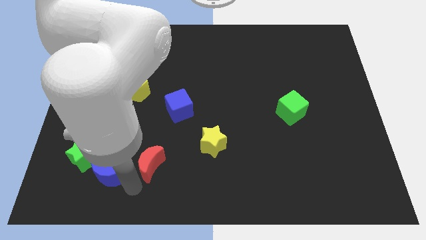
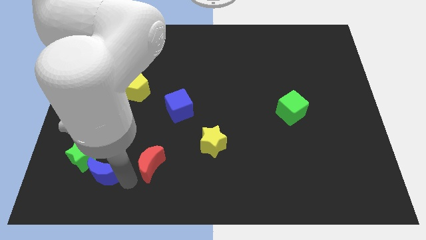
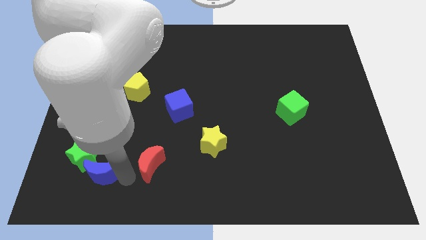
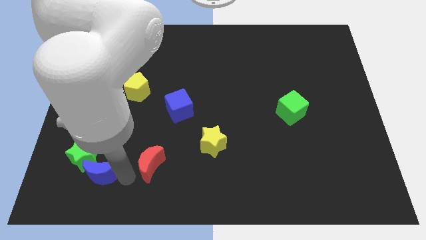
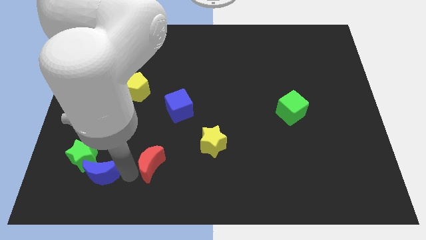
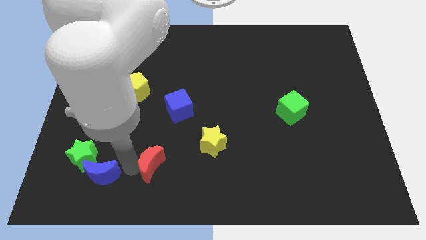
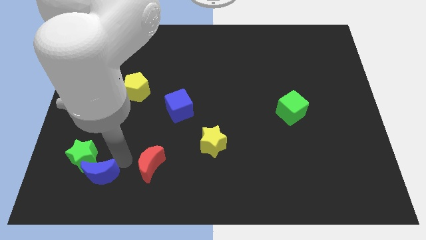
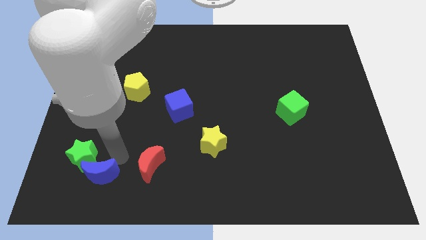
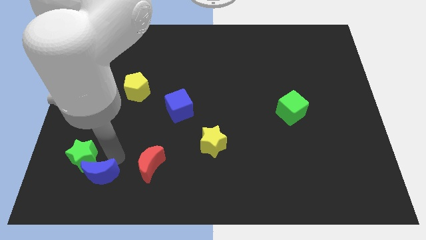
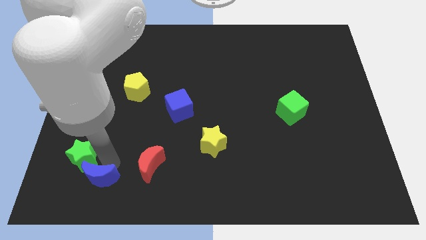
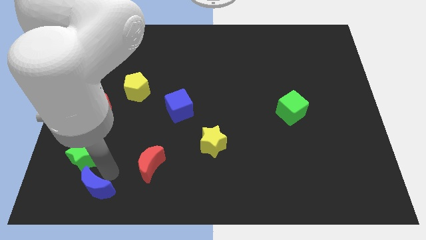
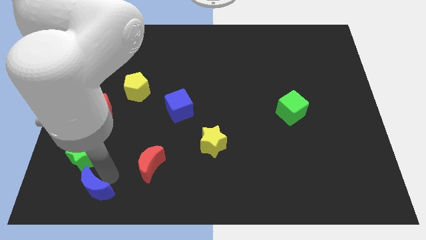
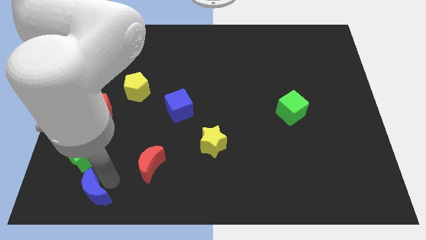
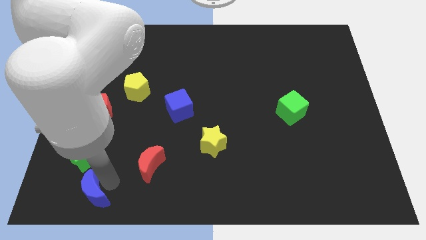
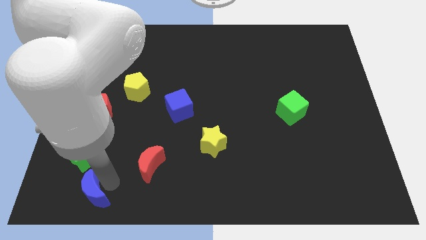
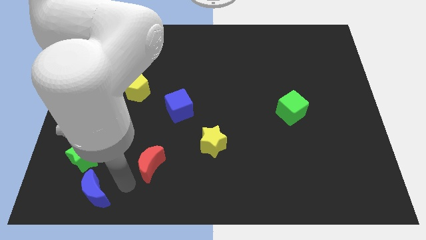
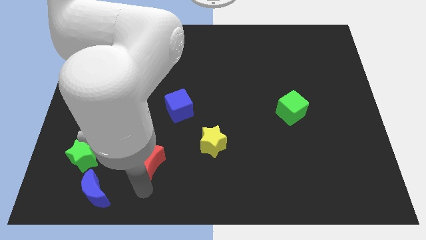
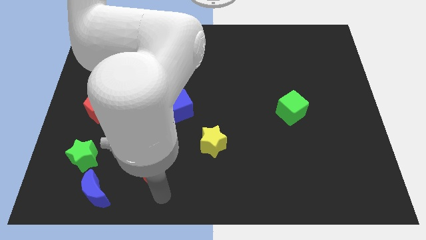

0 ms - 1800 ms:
place the blue moon to the bottom of the green star

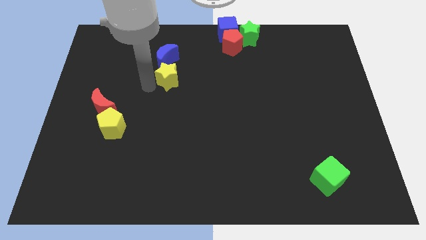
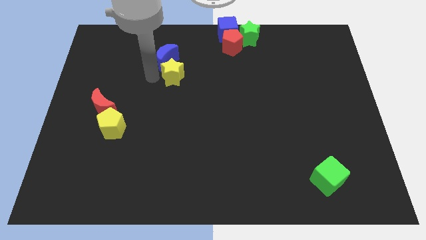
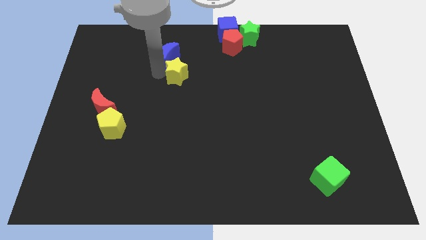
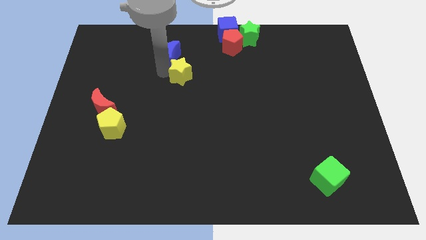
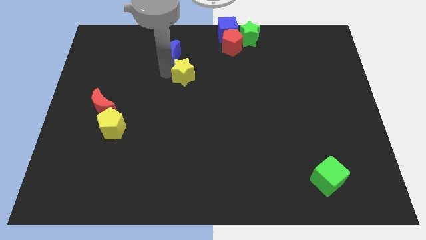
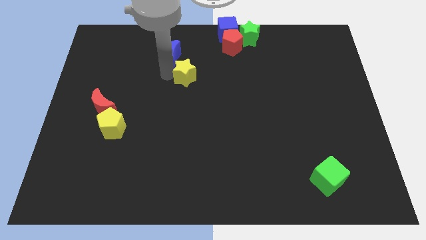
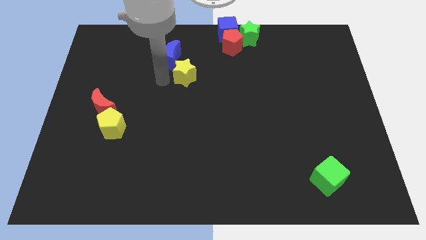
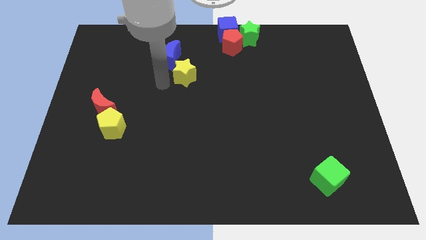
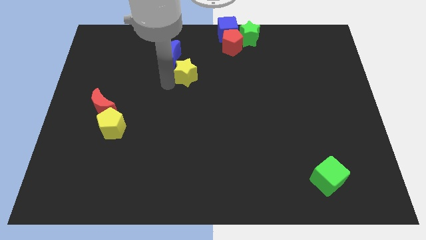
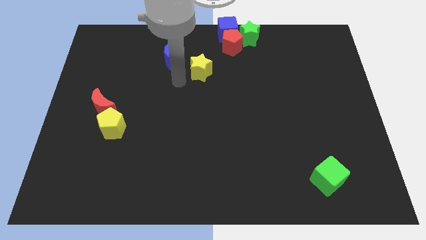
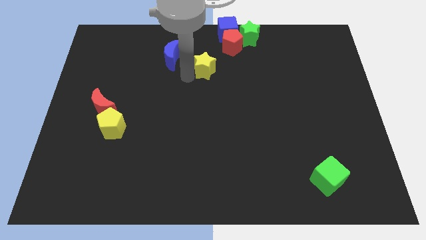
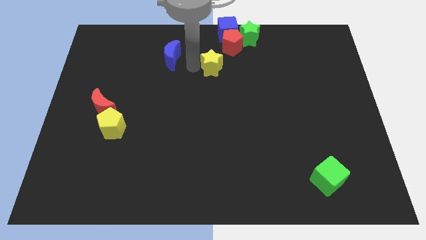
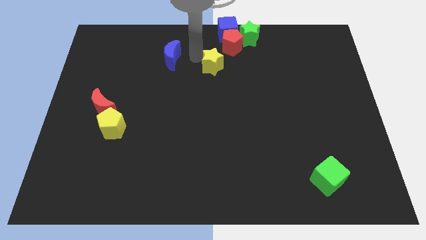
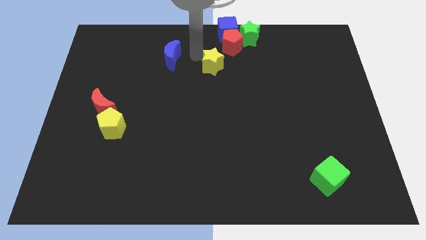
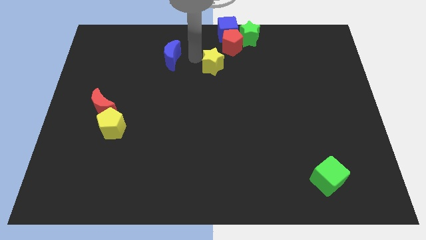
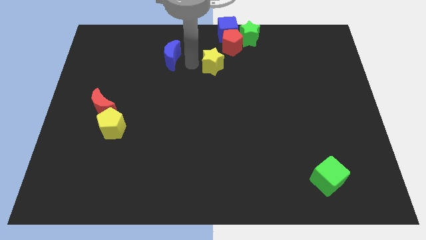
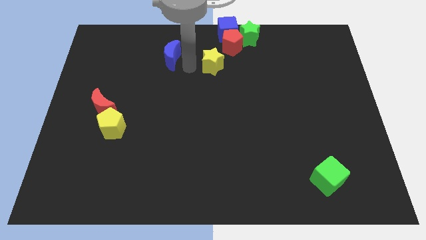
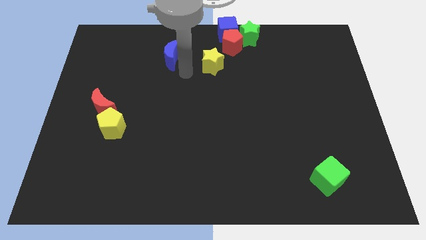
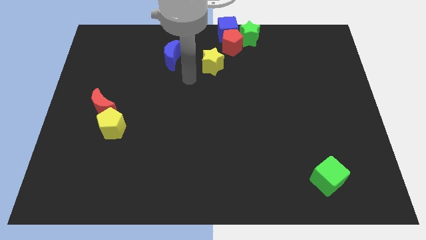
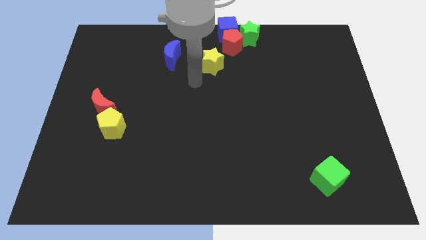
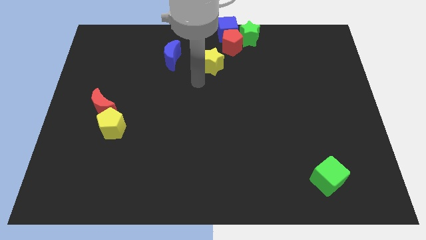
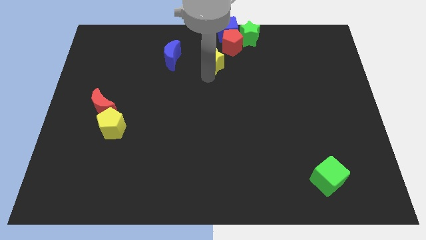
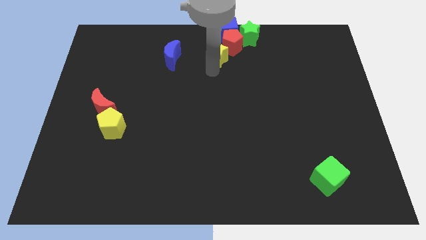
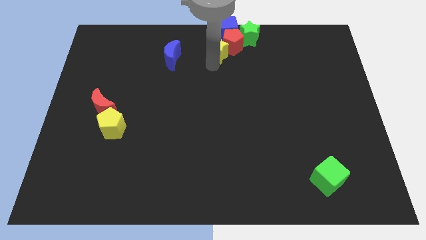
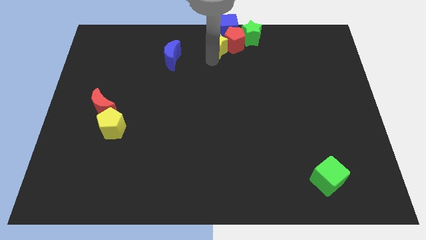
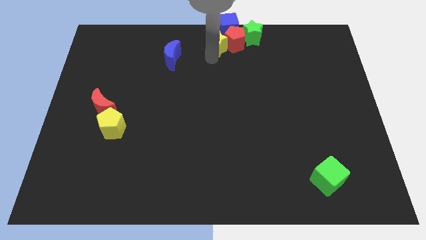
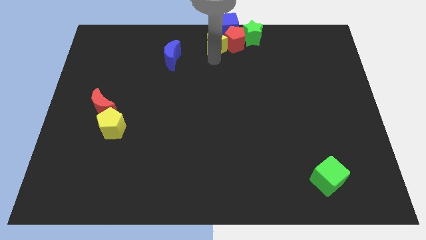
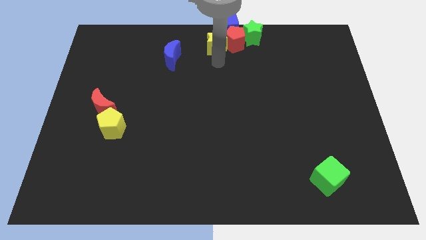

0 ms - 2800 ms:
push the yellow star into the red pentagon

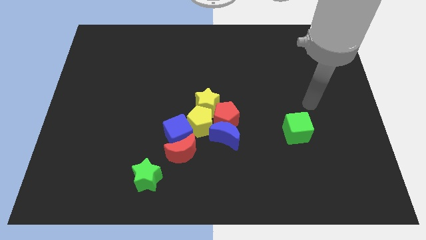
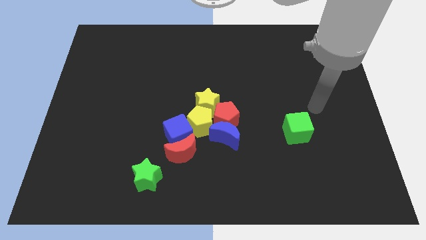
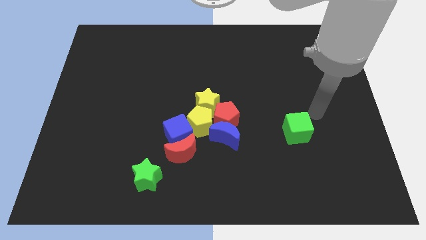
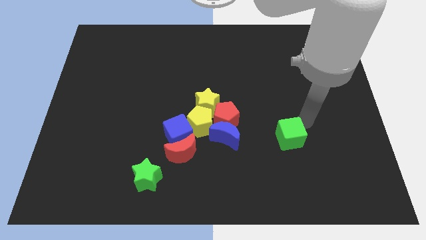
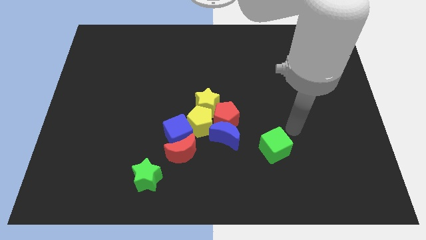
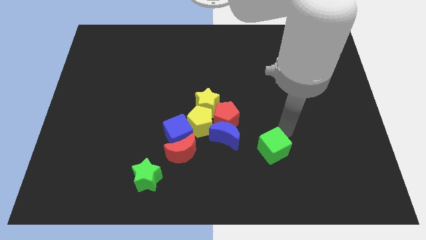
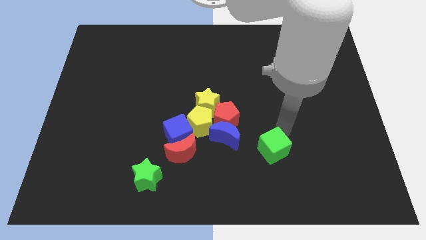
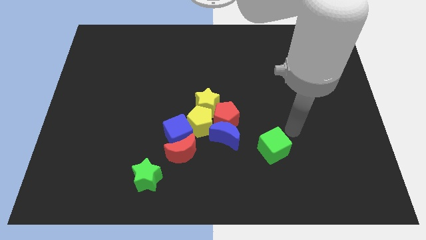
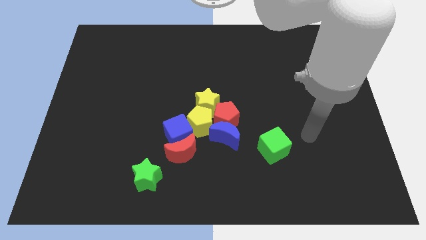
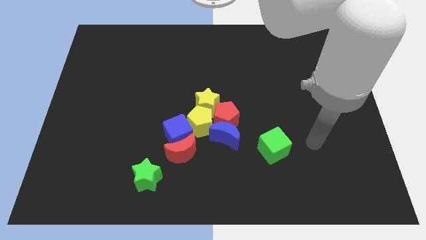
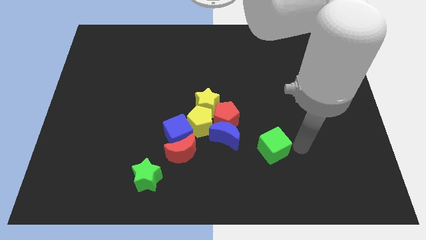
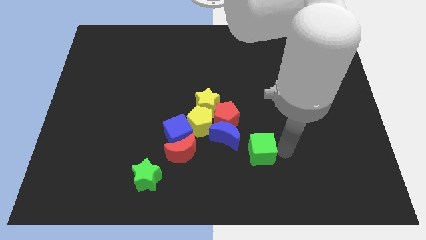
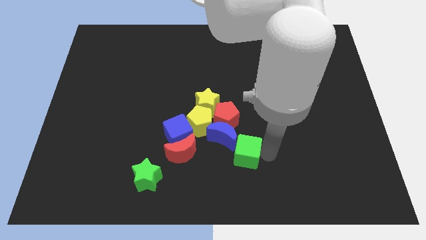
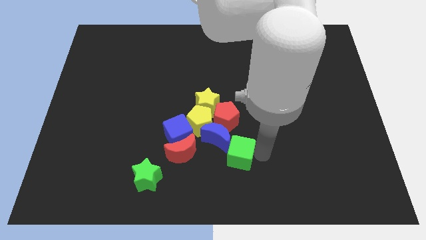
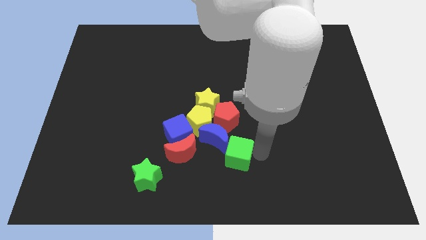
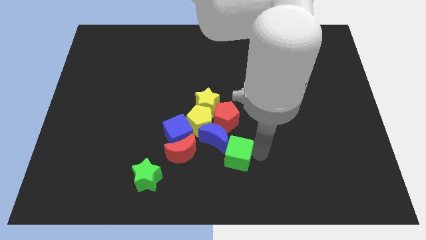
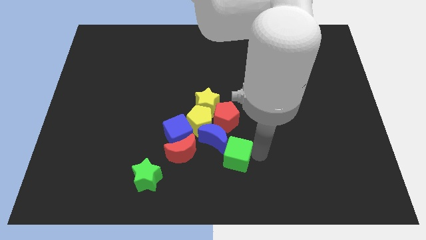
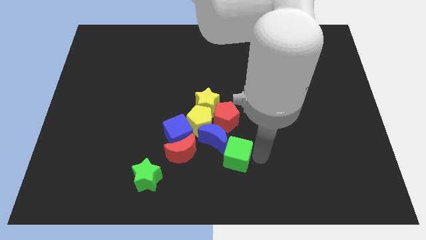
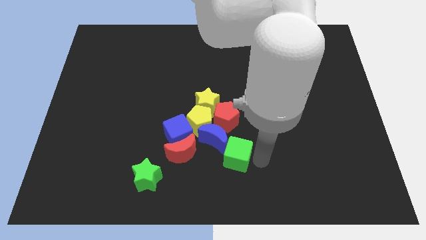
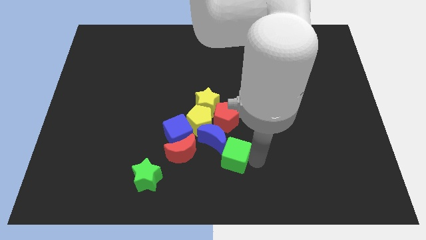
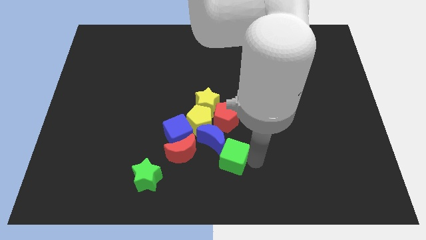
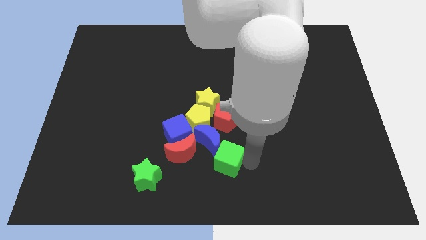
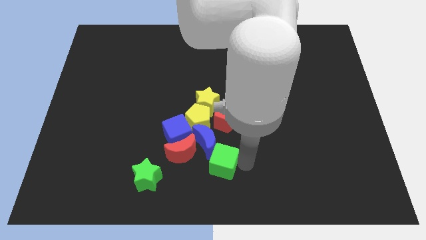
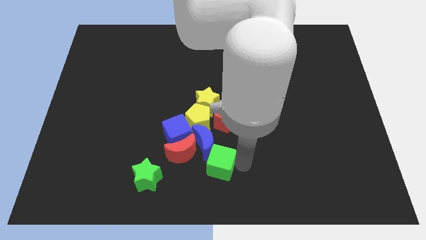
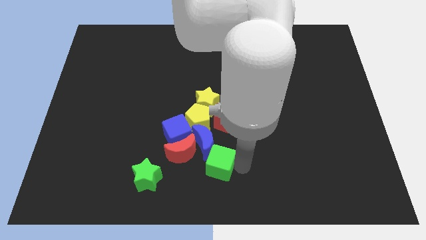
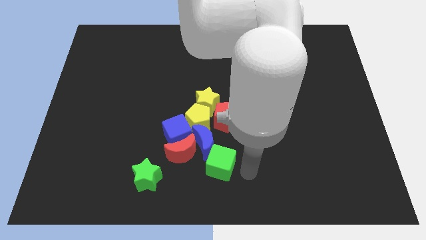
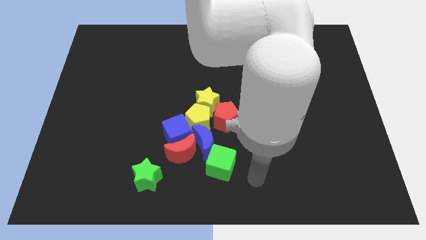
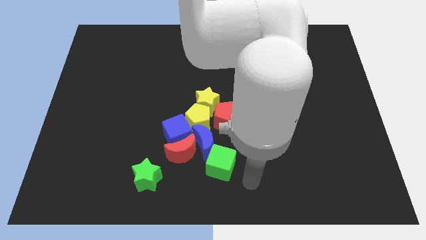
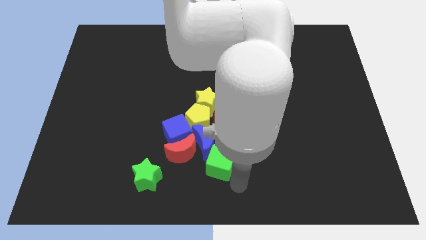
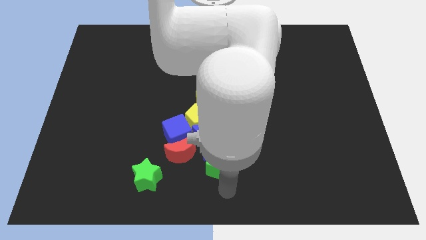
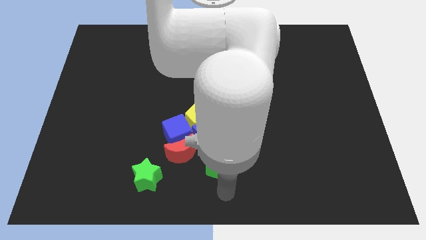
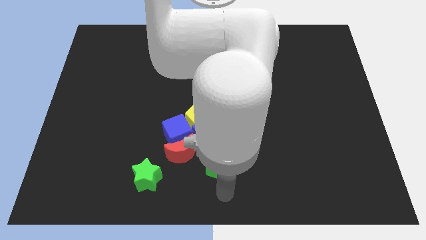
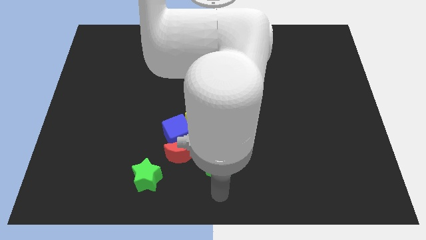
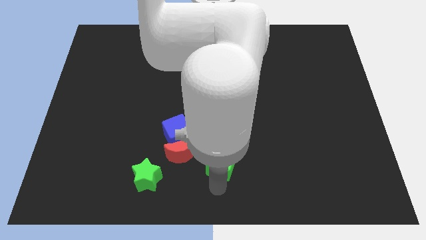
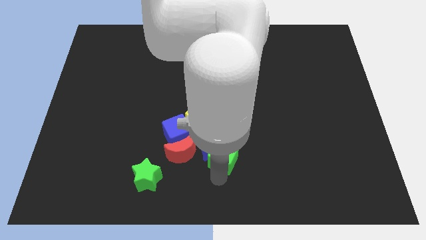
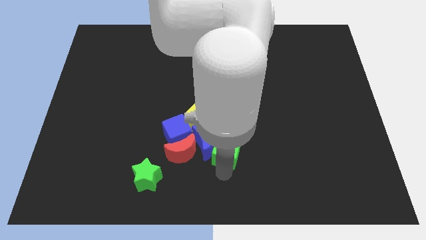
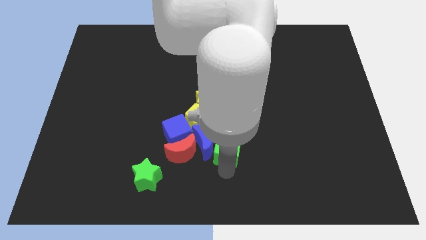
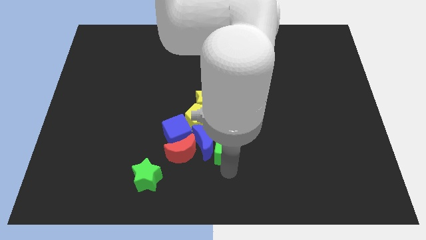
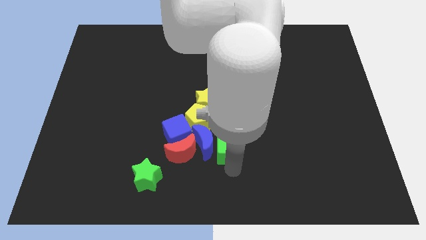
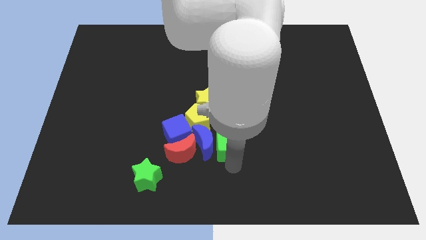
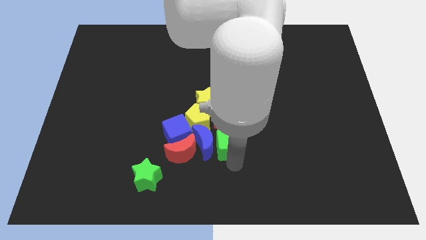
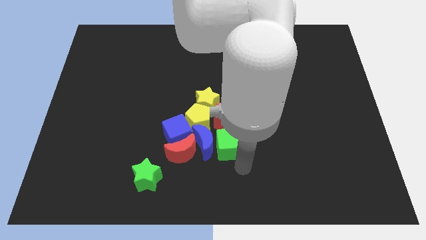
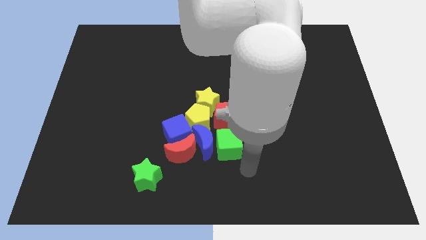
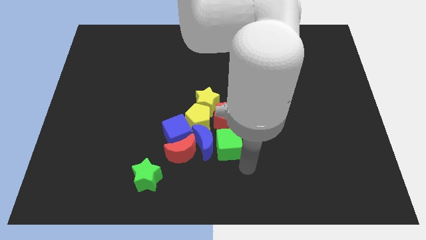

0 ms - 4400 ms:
place the green cube vertically below the red pentagon
